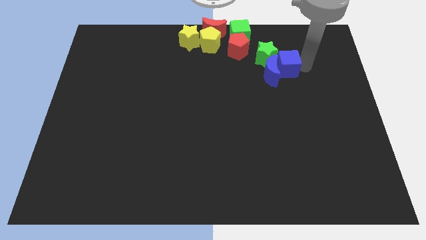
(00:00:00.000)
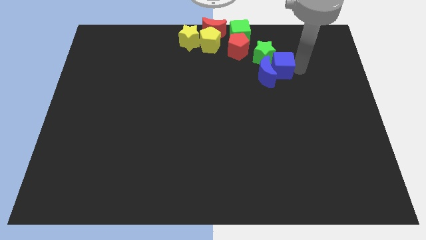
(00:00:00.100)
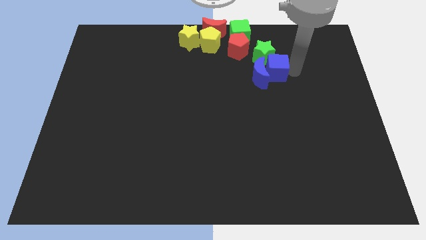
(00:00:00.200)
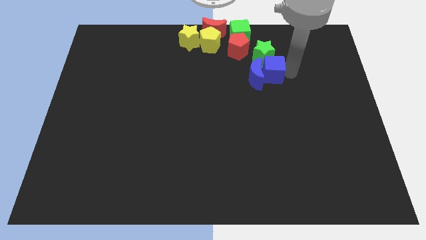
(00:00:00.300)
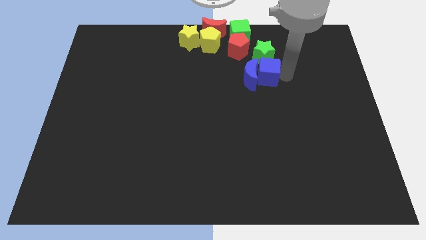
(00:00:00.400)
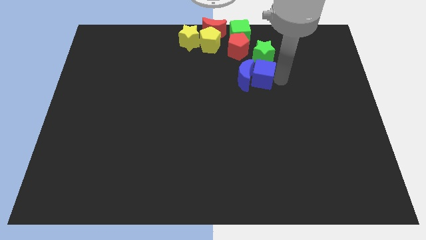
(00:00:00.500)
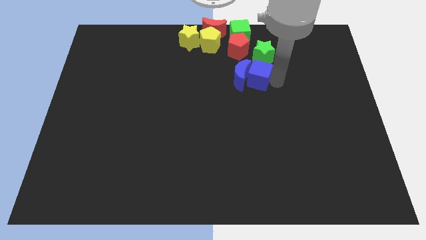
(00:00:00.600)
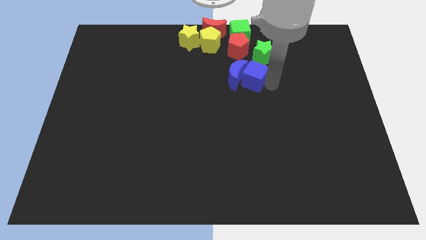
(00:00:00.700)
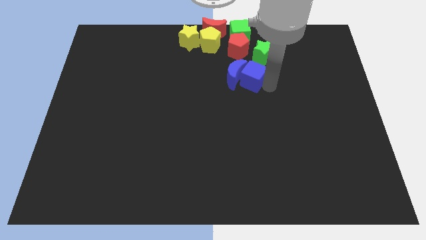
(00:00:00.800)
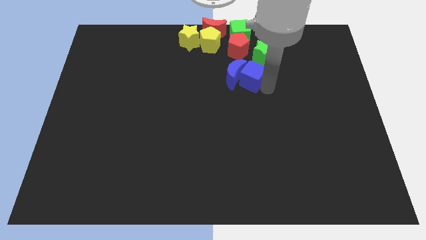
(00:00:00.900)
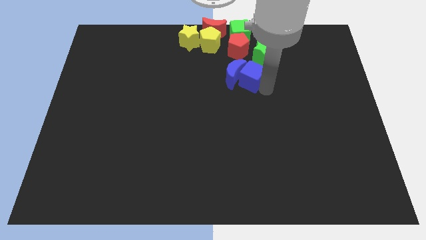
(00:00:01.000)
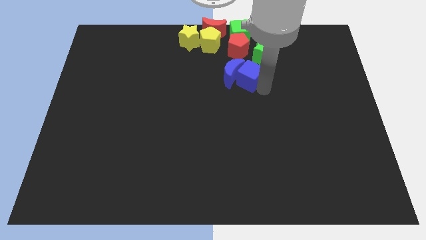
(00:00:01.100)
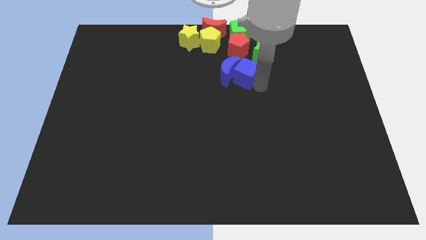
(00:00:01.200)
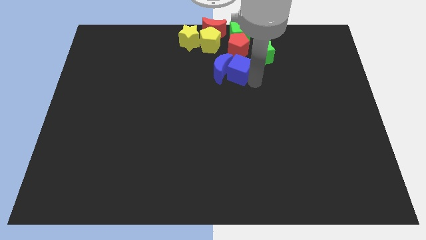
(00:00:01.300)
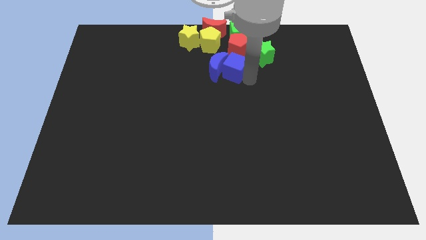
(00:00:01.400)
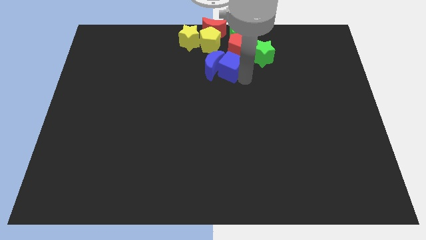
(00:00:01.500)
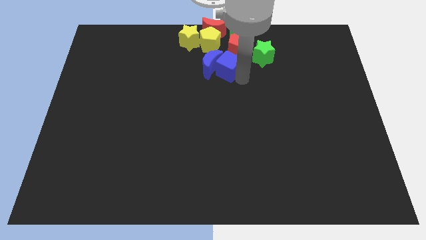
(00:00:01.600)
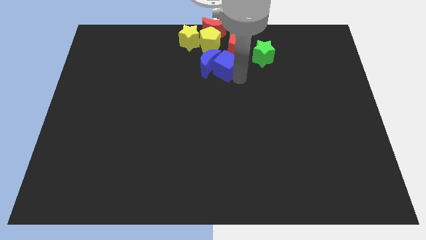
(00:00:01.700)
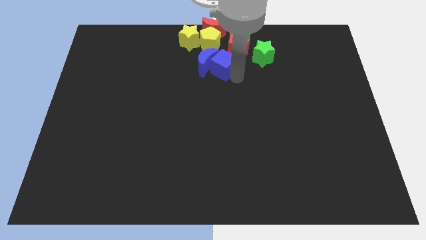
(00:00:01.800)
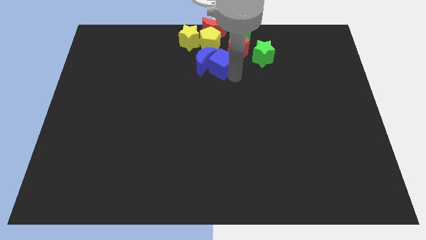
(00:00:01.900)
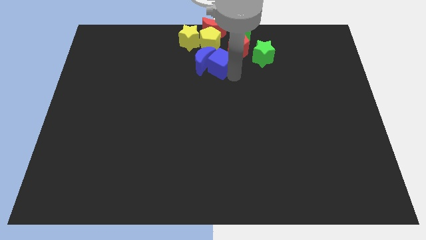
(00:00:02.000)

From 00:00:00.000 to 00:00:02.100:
place the blue blocks below the yellow pentagon

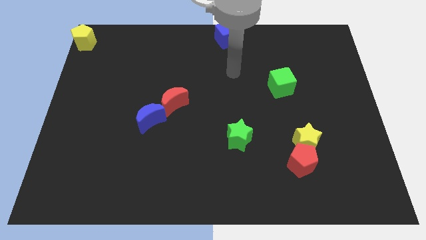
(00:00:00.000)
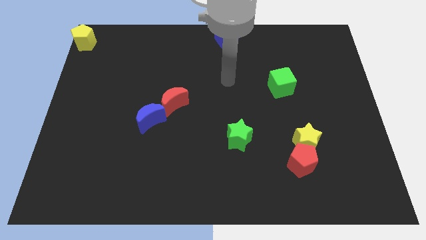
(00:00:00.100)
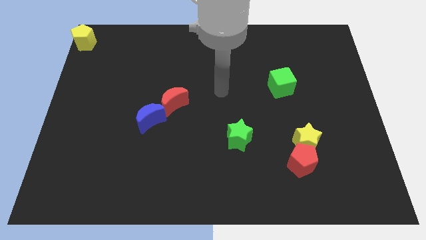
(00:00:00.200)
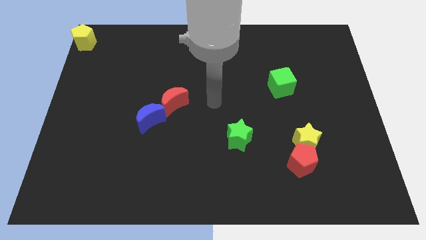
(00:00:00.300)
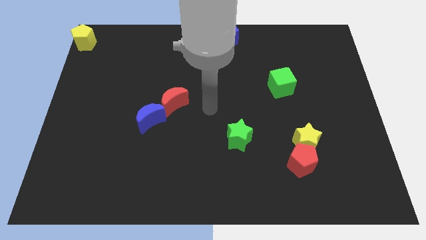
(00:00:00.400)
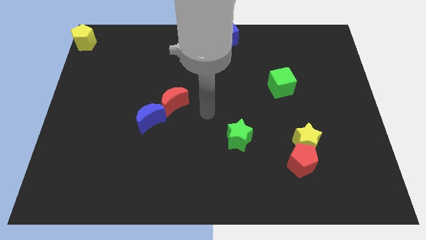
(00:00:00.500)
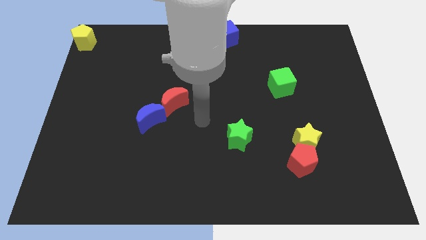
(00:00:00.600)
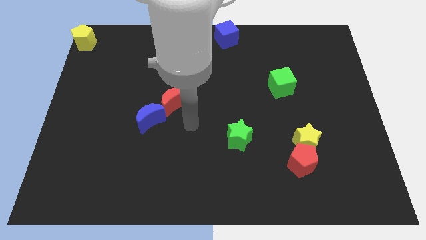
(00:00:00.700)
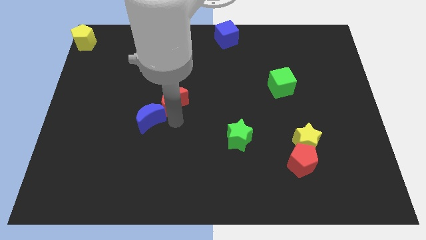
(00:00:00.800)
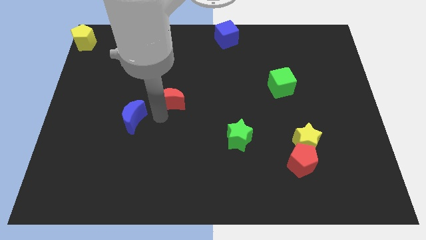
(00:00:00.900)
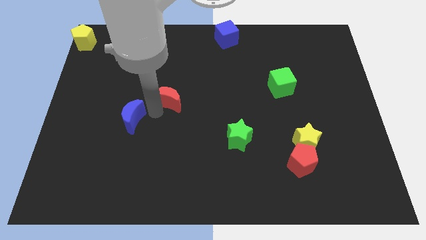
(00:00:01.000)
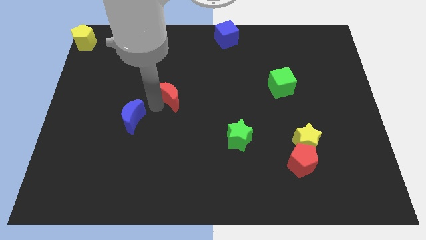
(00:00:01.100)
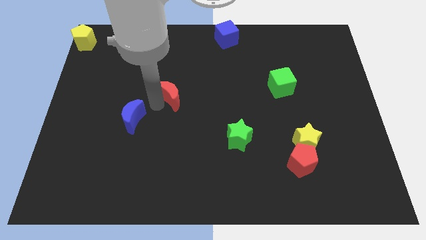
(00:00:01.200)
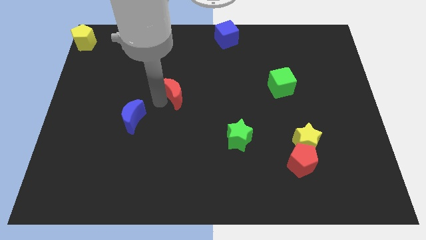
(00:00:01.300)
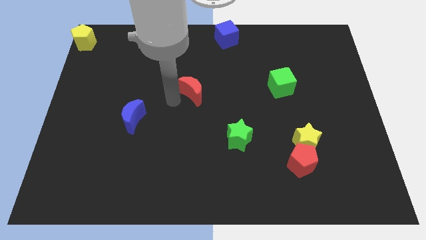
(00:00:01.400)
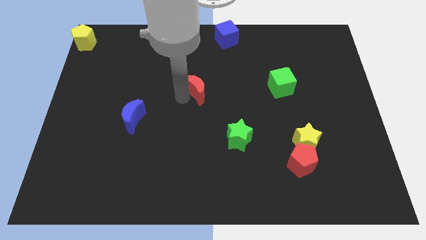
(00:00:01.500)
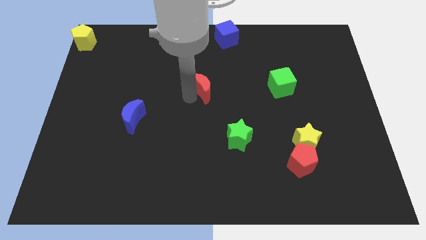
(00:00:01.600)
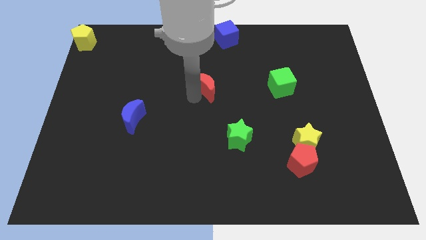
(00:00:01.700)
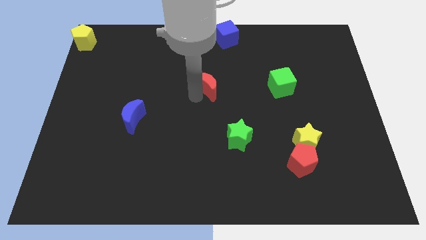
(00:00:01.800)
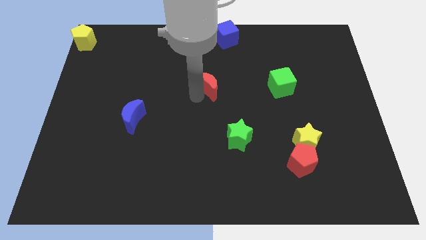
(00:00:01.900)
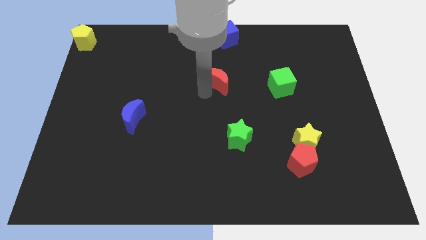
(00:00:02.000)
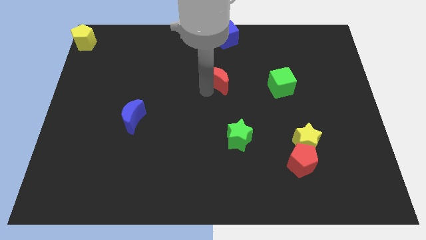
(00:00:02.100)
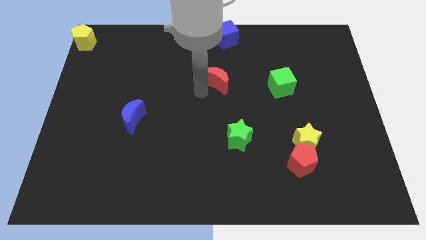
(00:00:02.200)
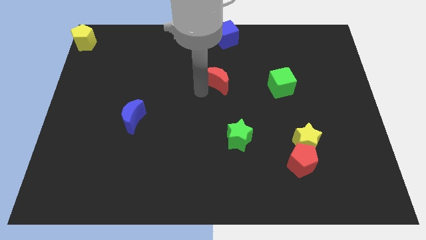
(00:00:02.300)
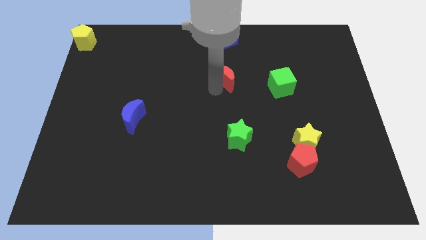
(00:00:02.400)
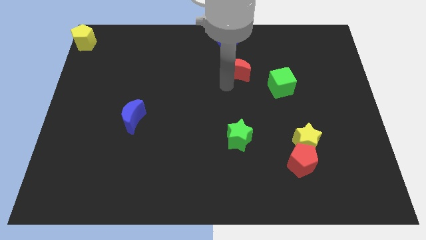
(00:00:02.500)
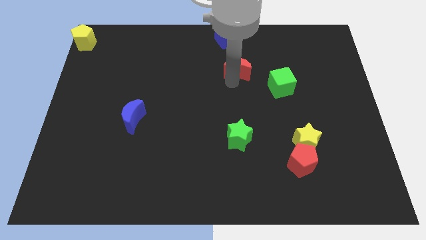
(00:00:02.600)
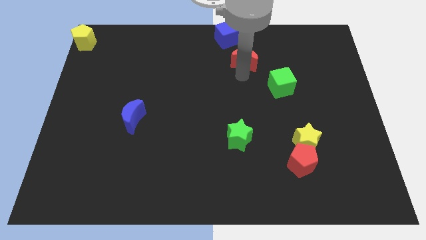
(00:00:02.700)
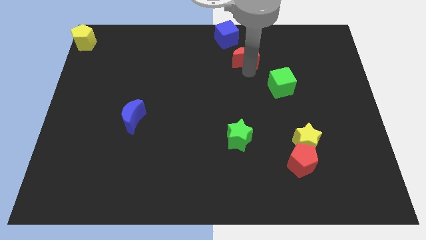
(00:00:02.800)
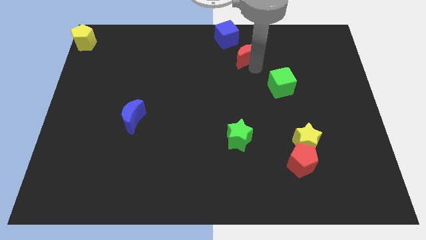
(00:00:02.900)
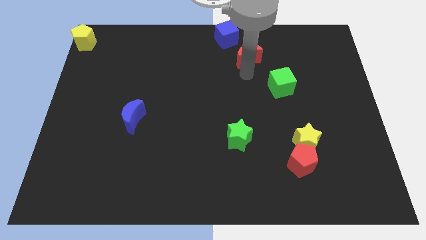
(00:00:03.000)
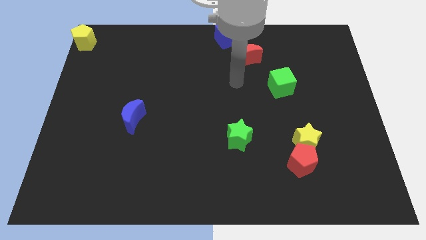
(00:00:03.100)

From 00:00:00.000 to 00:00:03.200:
move the red moon away from the blue moon

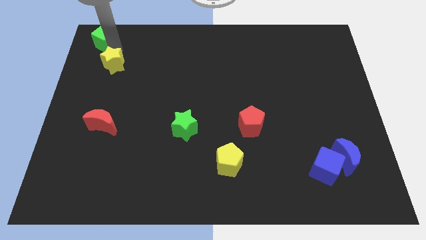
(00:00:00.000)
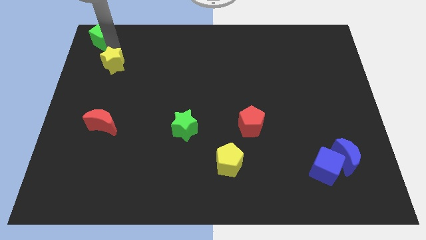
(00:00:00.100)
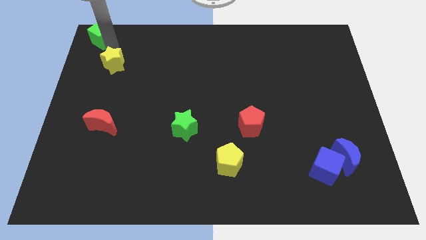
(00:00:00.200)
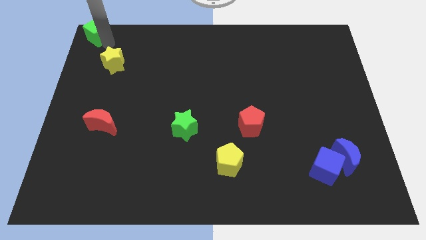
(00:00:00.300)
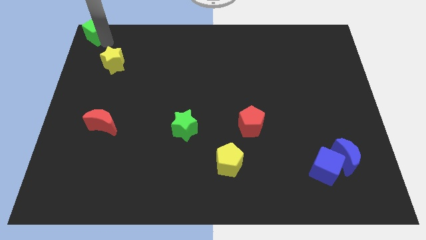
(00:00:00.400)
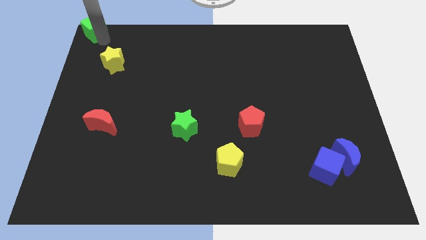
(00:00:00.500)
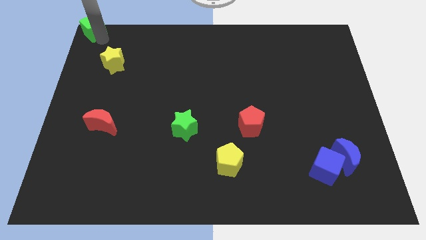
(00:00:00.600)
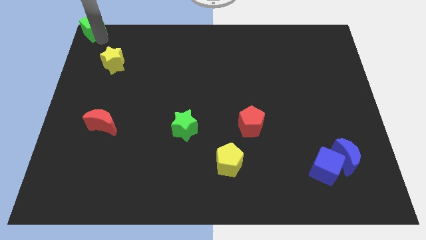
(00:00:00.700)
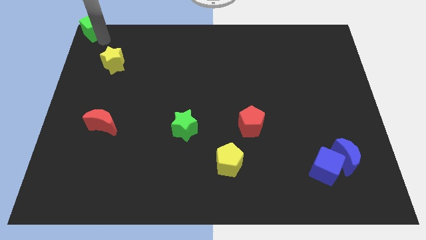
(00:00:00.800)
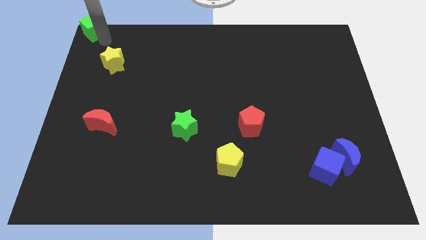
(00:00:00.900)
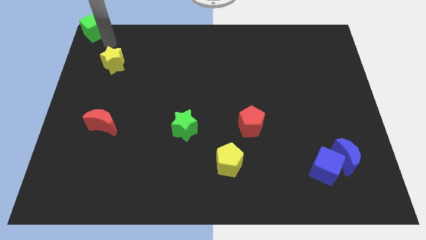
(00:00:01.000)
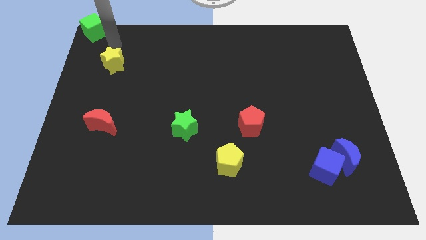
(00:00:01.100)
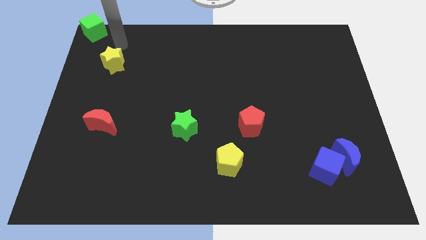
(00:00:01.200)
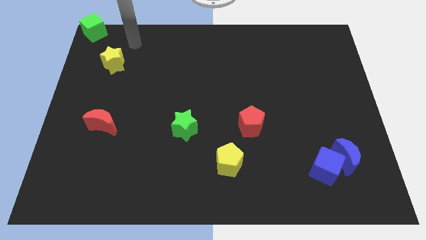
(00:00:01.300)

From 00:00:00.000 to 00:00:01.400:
place green cube towards top left corner end

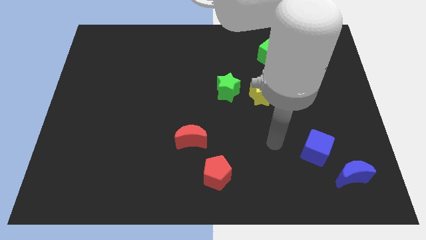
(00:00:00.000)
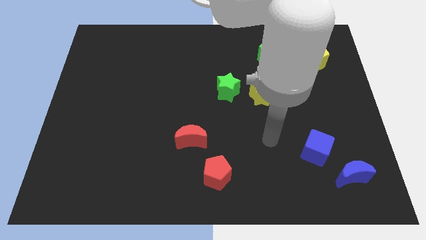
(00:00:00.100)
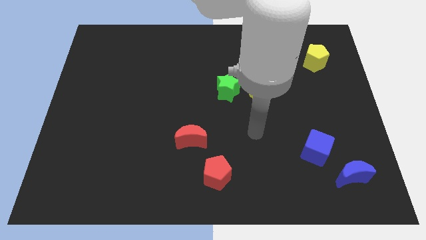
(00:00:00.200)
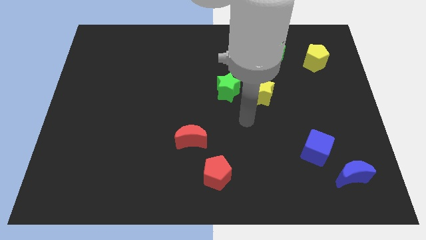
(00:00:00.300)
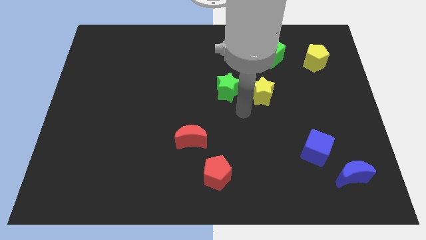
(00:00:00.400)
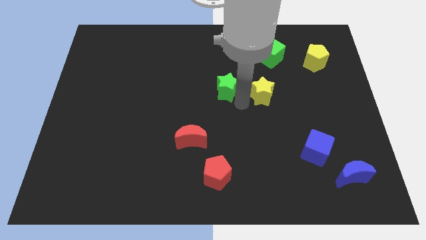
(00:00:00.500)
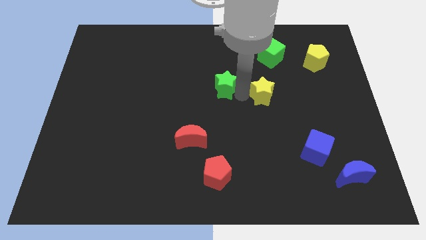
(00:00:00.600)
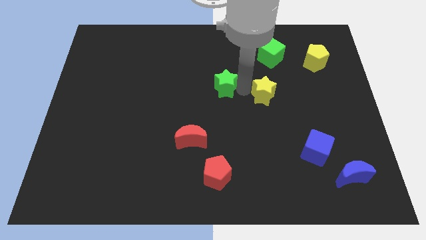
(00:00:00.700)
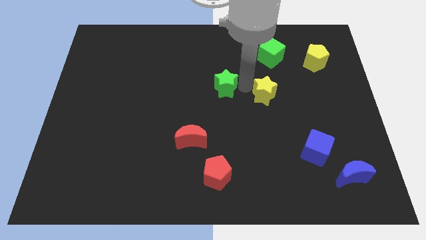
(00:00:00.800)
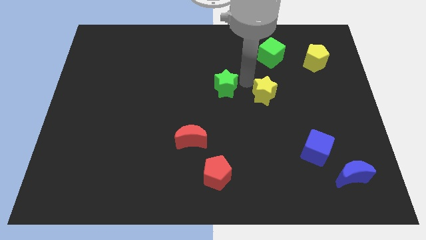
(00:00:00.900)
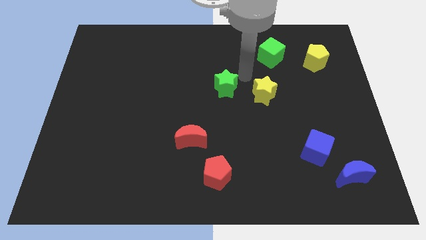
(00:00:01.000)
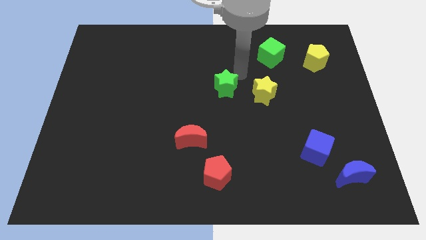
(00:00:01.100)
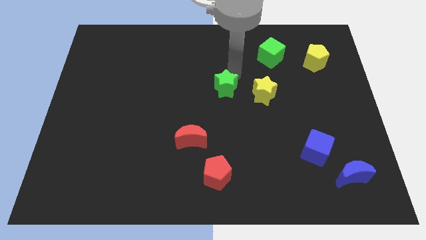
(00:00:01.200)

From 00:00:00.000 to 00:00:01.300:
separate the two star yellow and green

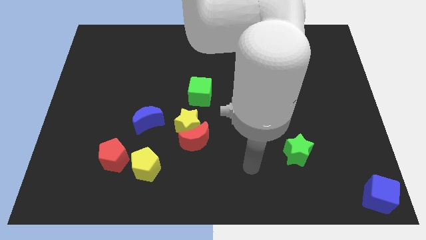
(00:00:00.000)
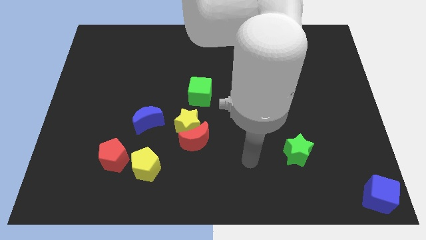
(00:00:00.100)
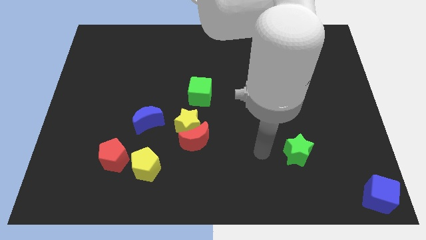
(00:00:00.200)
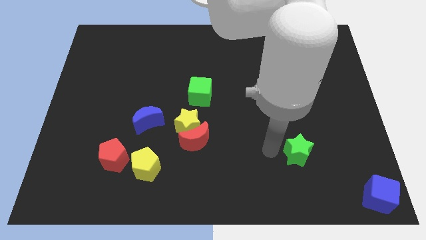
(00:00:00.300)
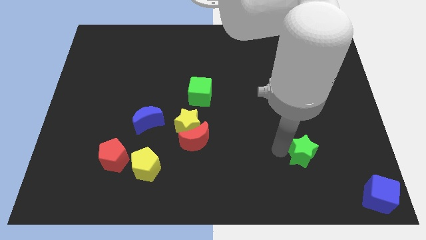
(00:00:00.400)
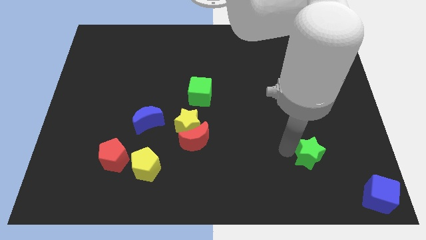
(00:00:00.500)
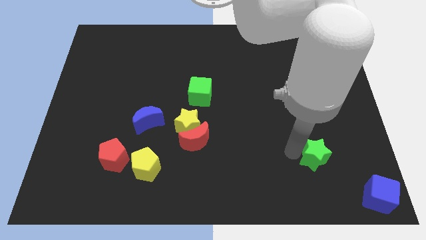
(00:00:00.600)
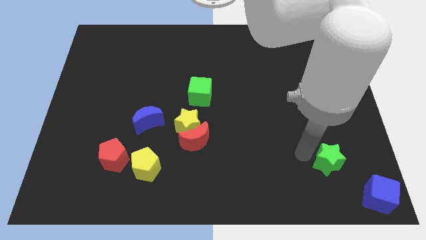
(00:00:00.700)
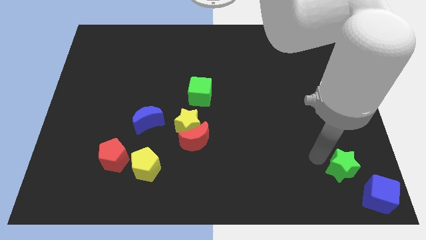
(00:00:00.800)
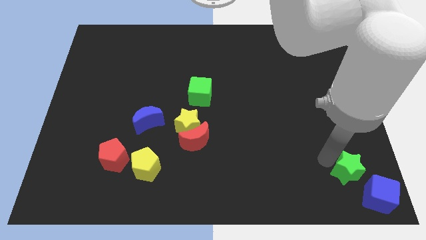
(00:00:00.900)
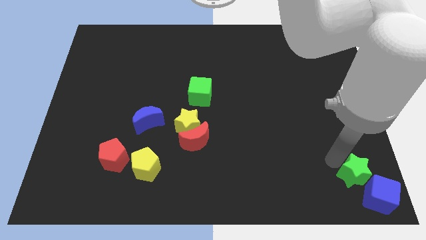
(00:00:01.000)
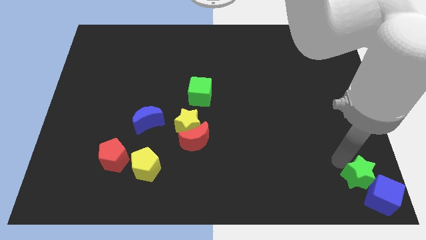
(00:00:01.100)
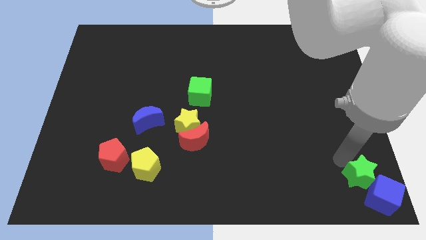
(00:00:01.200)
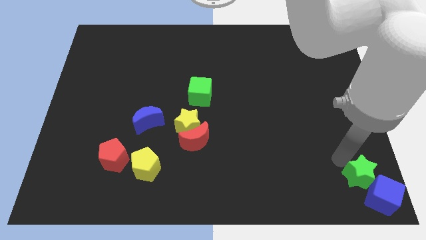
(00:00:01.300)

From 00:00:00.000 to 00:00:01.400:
push green star into the blue cube
